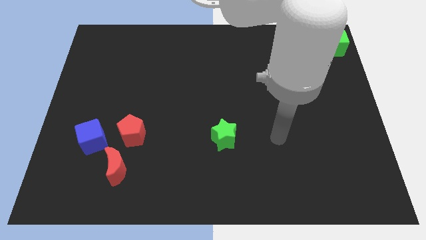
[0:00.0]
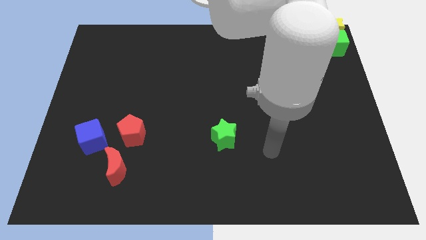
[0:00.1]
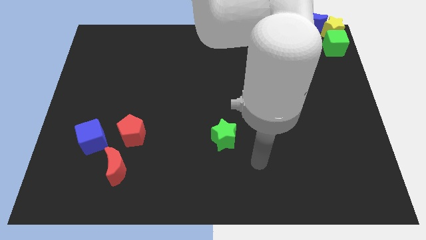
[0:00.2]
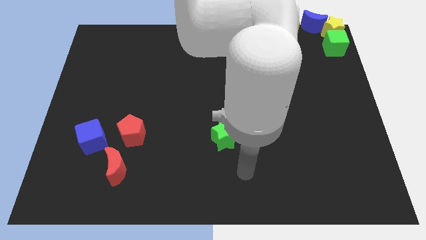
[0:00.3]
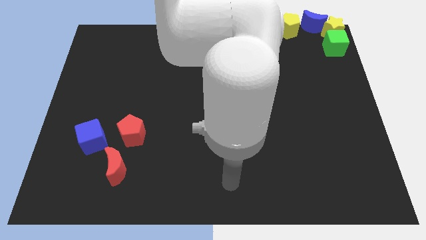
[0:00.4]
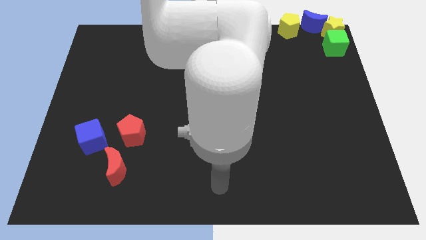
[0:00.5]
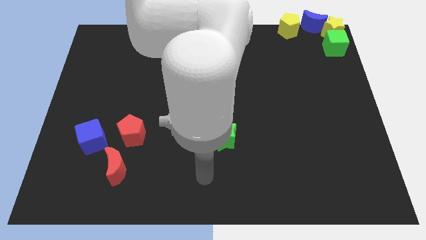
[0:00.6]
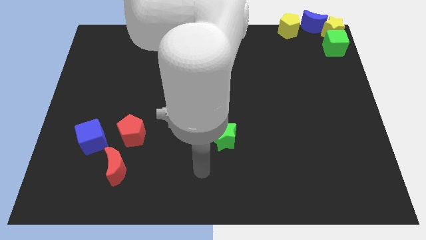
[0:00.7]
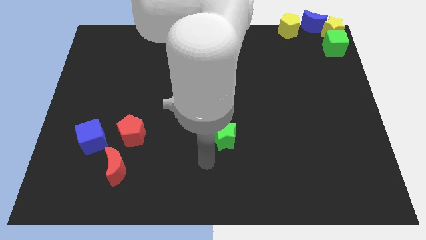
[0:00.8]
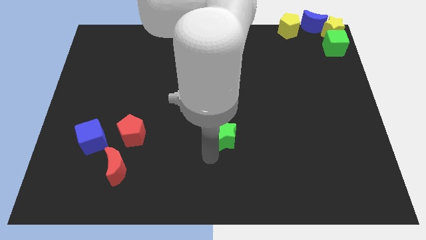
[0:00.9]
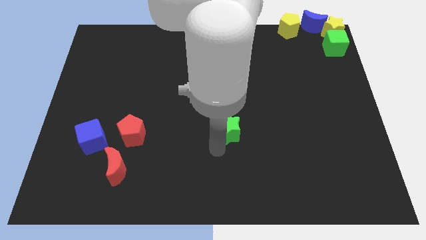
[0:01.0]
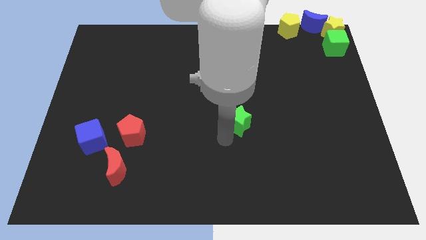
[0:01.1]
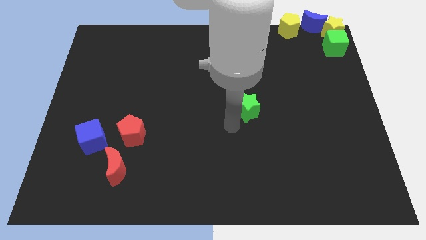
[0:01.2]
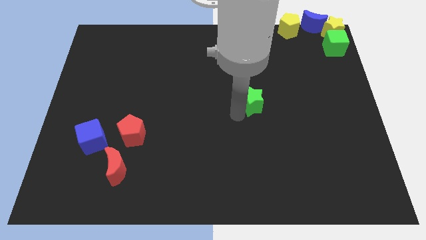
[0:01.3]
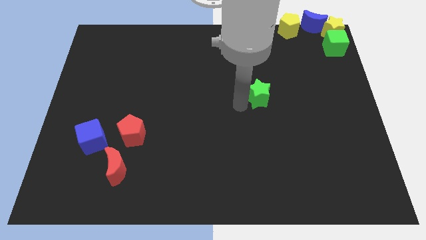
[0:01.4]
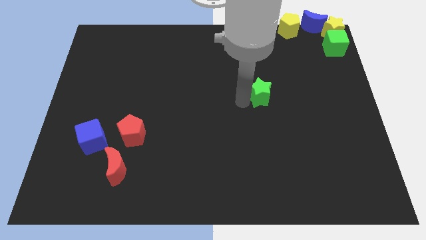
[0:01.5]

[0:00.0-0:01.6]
place the green star diagonally to green cube

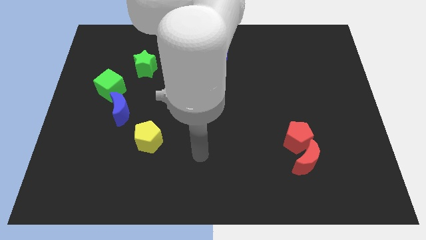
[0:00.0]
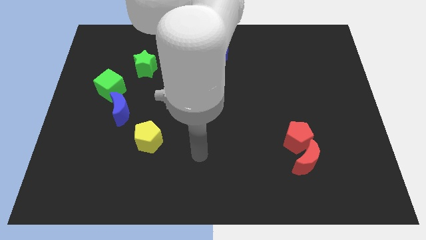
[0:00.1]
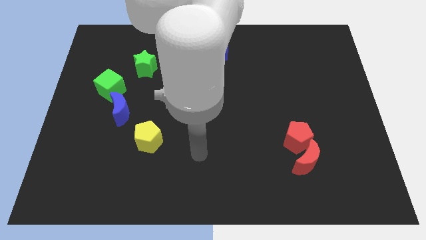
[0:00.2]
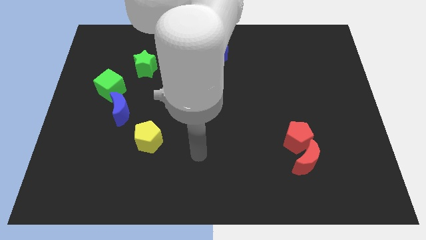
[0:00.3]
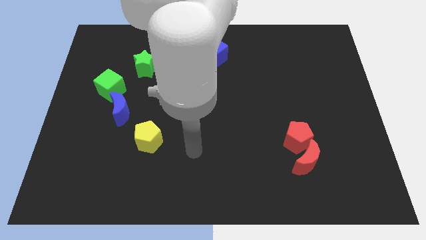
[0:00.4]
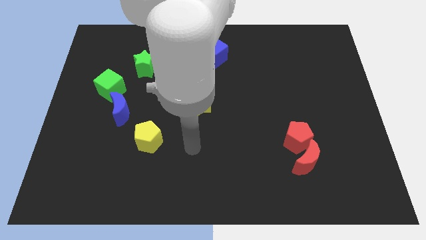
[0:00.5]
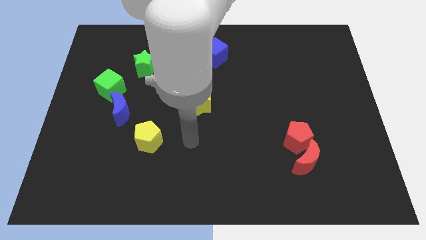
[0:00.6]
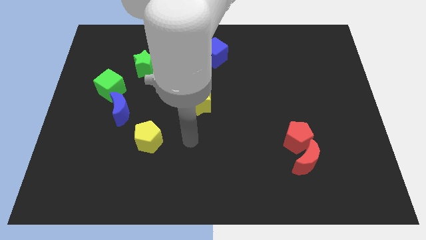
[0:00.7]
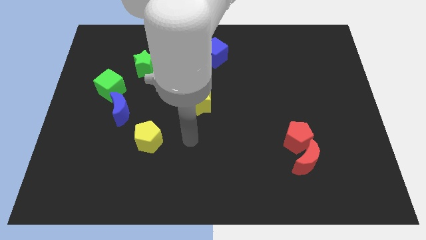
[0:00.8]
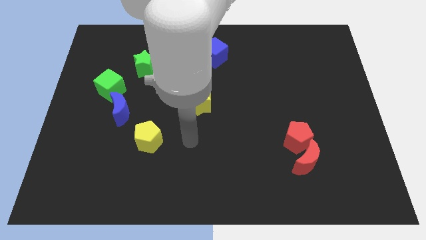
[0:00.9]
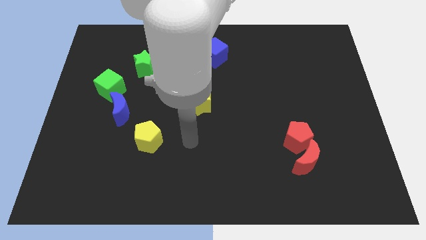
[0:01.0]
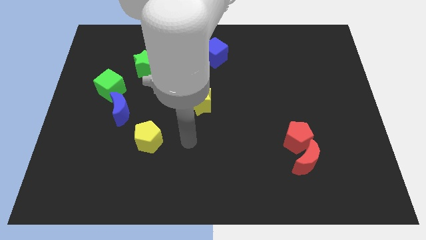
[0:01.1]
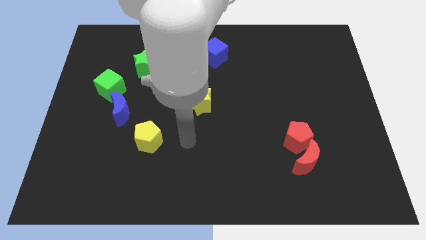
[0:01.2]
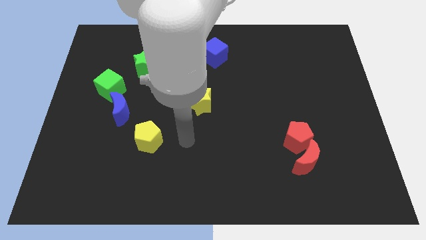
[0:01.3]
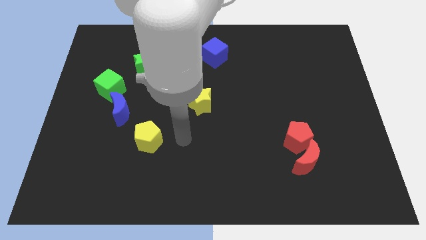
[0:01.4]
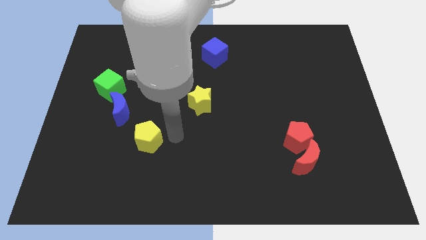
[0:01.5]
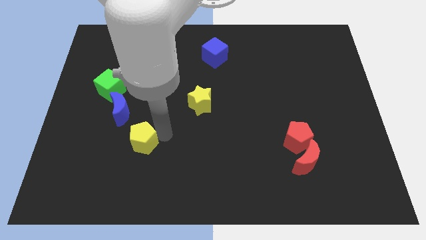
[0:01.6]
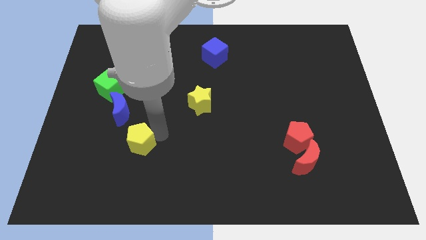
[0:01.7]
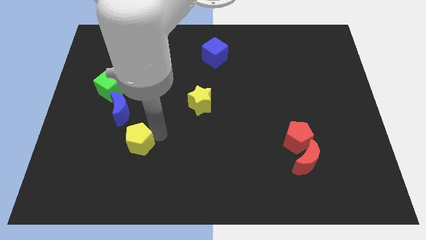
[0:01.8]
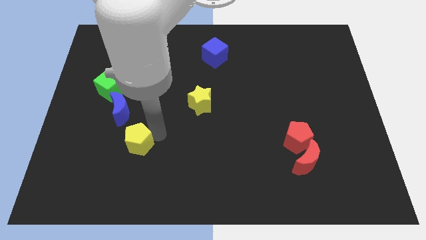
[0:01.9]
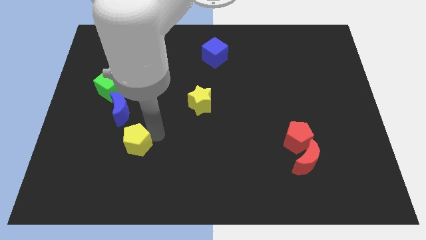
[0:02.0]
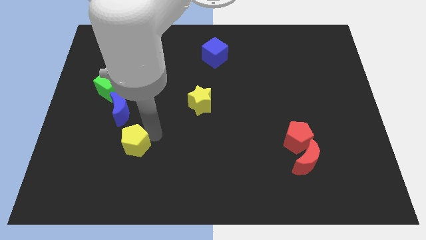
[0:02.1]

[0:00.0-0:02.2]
push the yellow pentagon towards the blue crescent

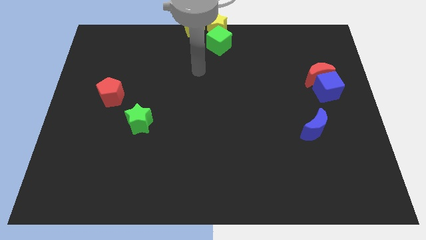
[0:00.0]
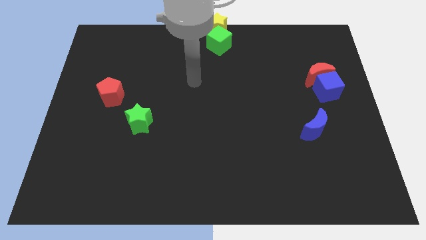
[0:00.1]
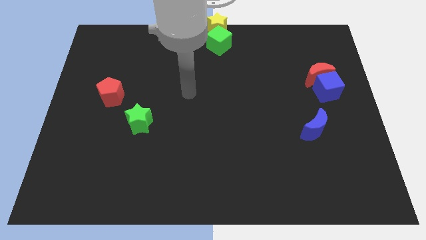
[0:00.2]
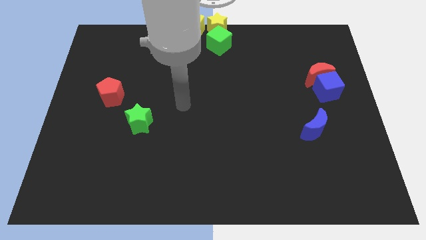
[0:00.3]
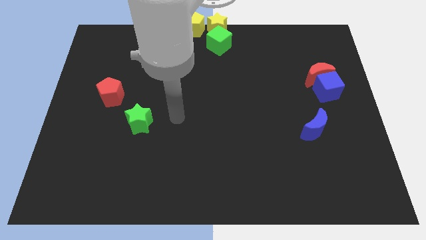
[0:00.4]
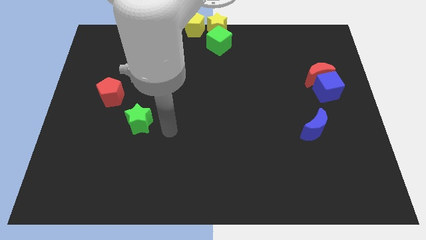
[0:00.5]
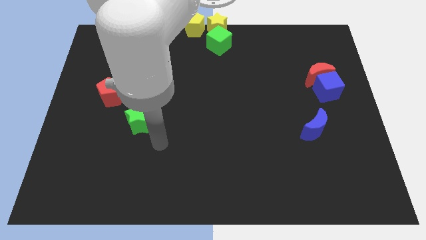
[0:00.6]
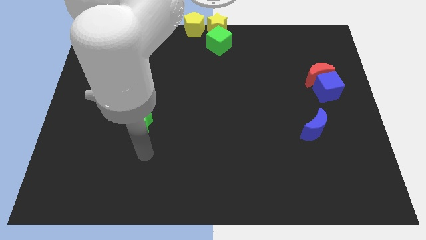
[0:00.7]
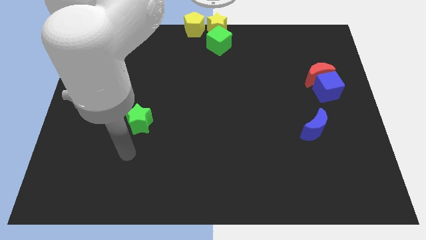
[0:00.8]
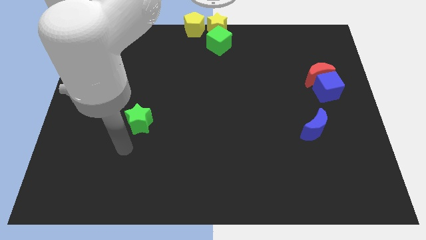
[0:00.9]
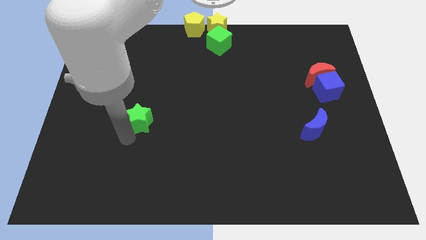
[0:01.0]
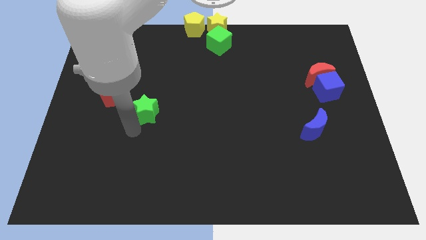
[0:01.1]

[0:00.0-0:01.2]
push green star slightly towards the top of the board

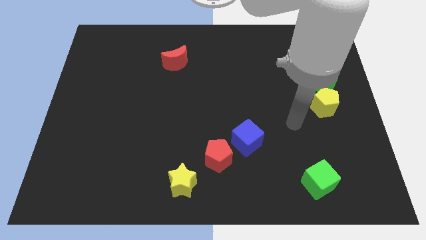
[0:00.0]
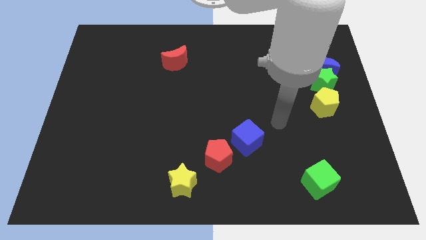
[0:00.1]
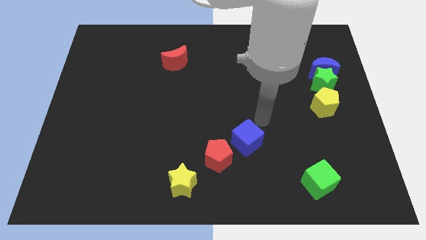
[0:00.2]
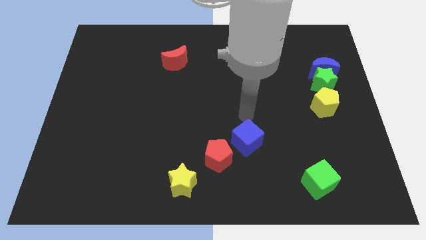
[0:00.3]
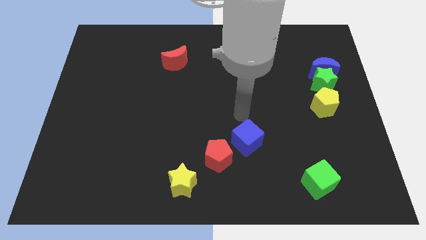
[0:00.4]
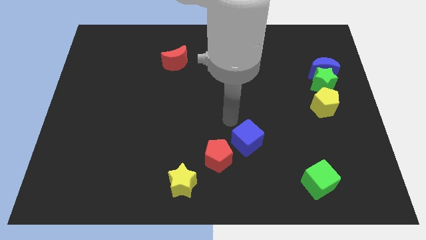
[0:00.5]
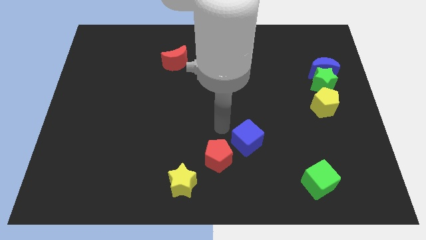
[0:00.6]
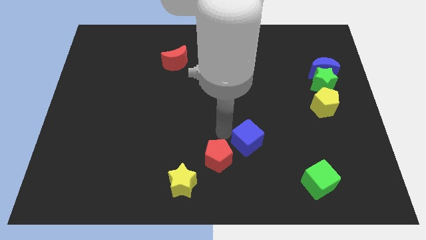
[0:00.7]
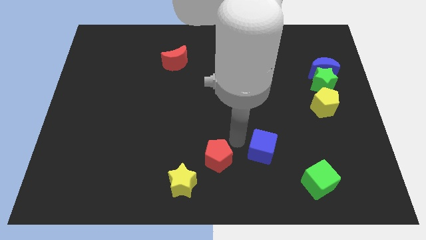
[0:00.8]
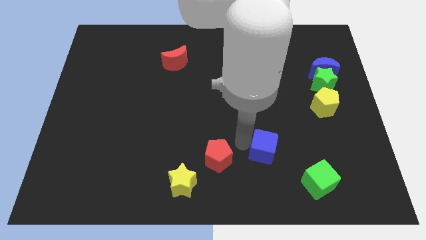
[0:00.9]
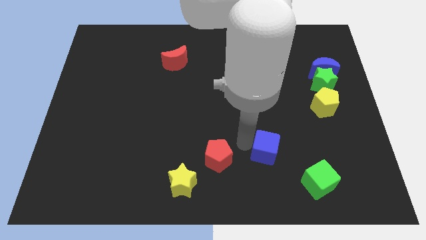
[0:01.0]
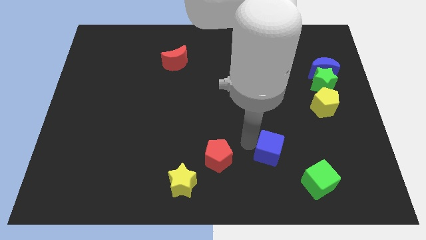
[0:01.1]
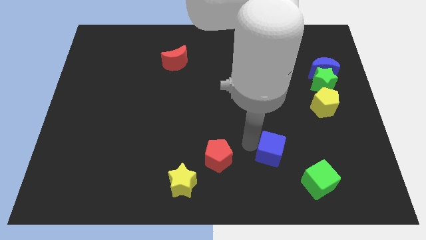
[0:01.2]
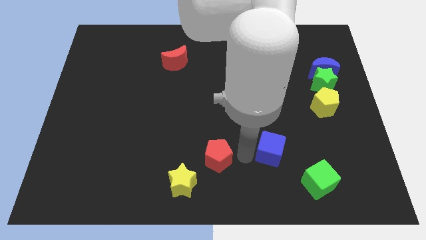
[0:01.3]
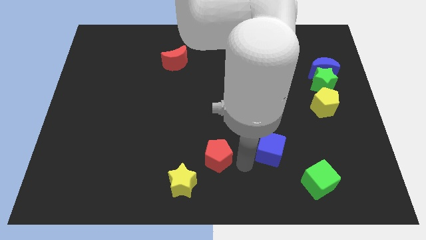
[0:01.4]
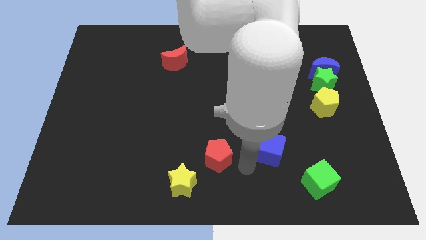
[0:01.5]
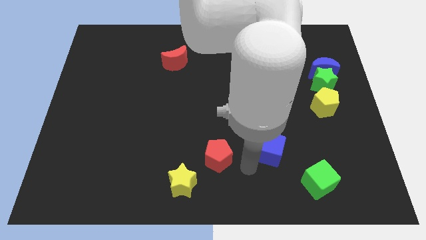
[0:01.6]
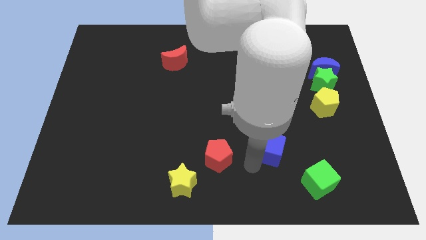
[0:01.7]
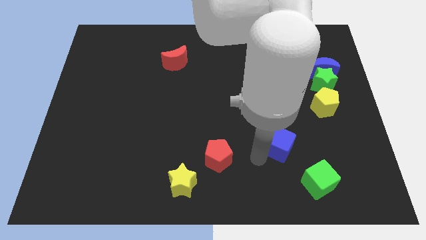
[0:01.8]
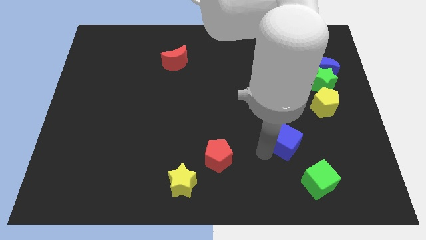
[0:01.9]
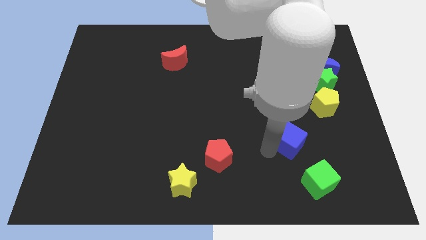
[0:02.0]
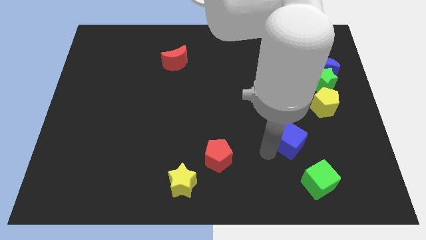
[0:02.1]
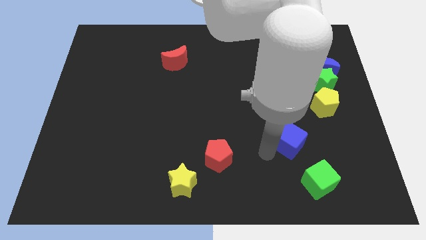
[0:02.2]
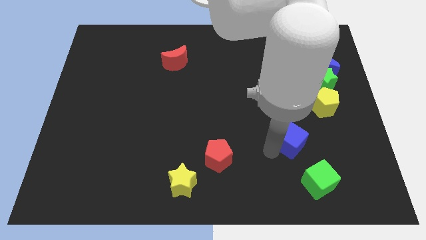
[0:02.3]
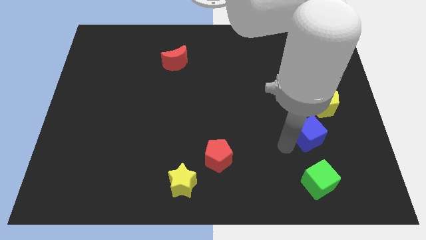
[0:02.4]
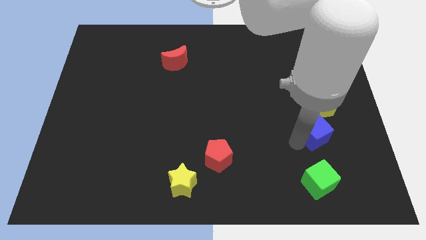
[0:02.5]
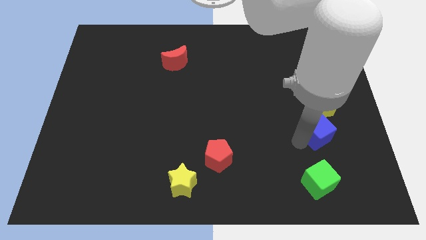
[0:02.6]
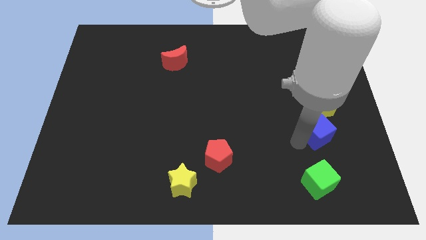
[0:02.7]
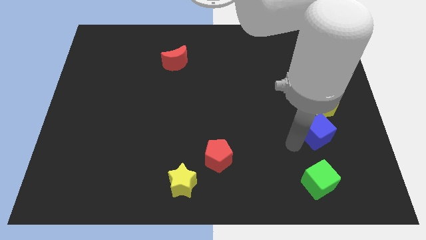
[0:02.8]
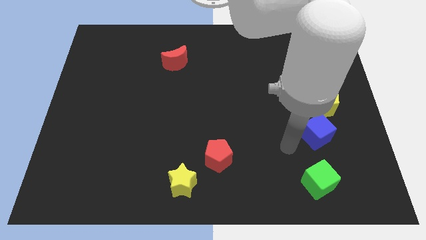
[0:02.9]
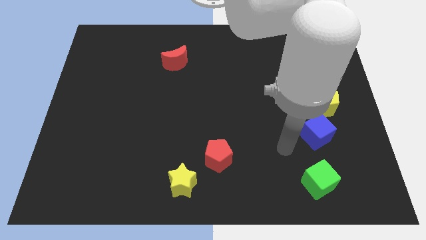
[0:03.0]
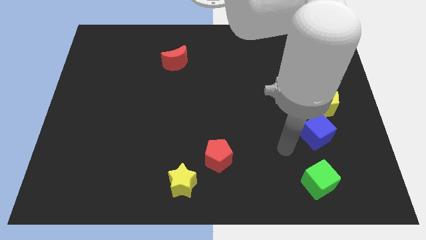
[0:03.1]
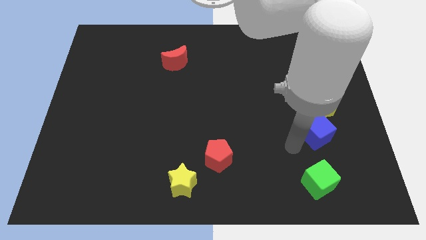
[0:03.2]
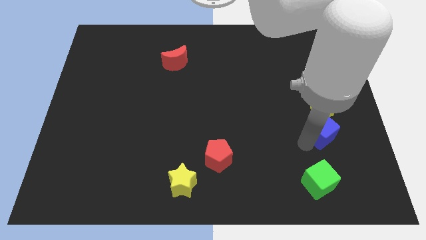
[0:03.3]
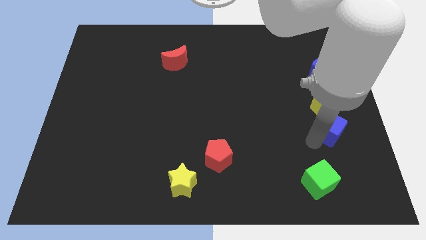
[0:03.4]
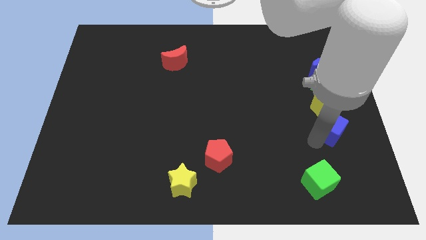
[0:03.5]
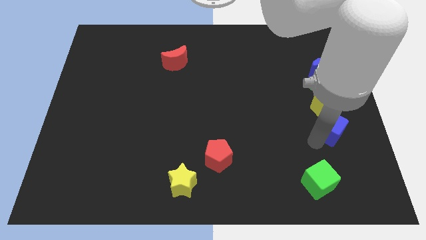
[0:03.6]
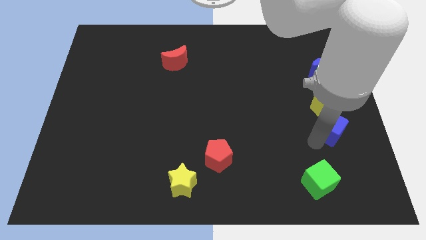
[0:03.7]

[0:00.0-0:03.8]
place the blue cube below the yellow pentagon
